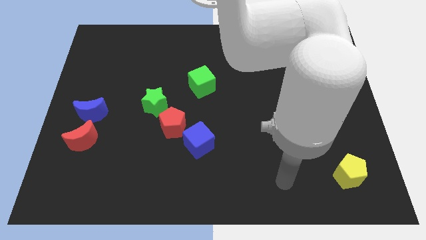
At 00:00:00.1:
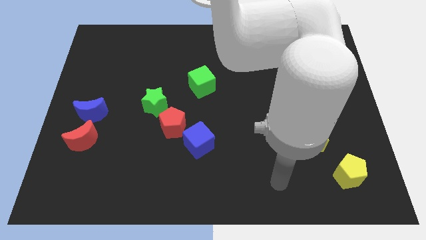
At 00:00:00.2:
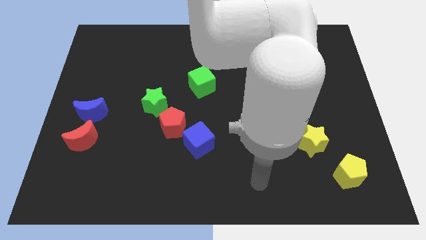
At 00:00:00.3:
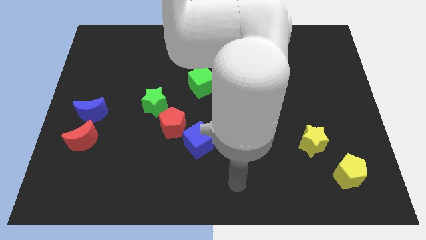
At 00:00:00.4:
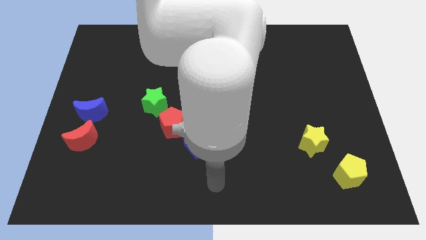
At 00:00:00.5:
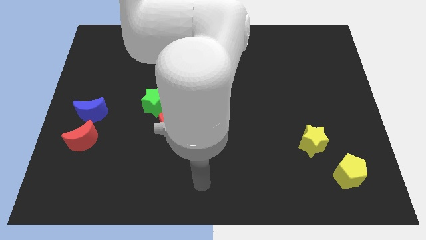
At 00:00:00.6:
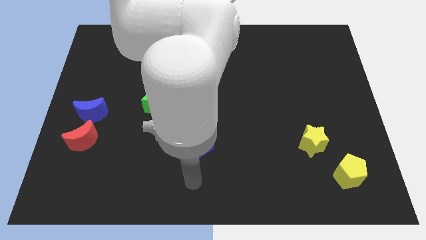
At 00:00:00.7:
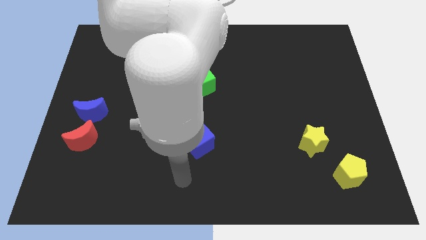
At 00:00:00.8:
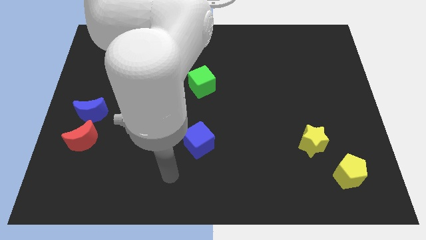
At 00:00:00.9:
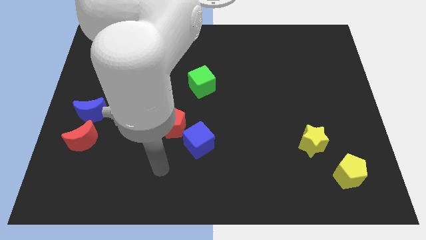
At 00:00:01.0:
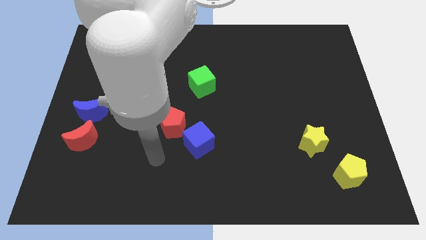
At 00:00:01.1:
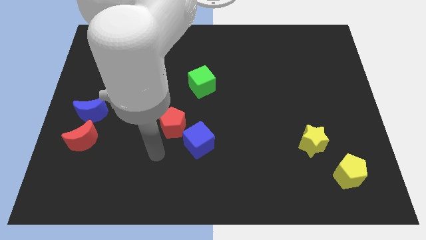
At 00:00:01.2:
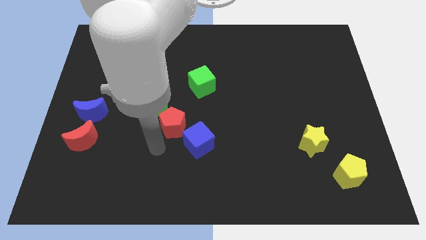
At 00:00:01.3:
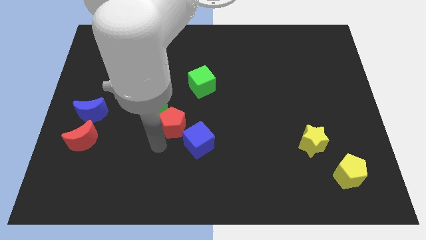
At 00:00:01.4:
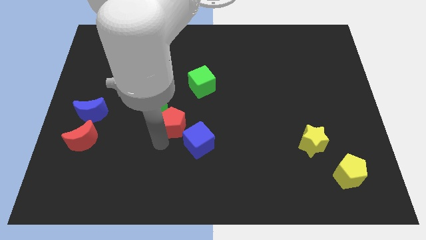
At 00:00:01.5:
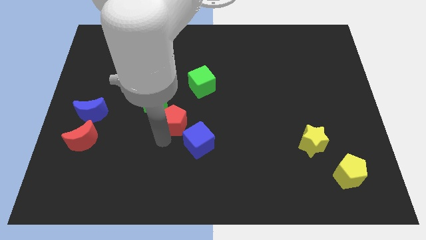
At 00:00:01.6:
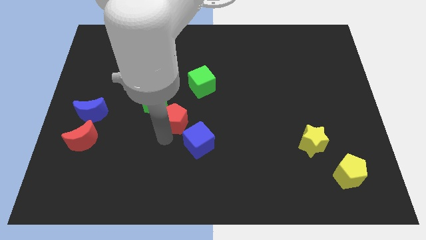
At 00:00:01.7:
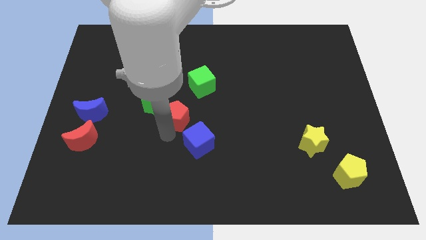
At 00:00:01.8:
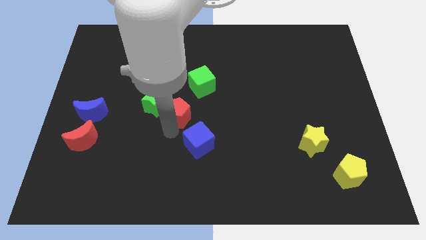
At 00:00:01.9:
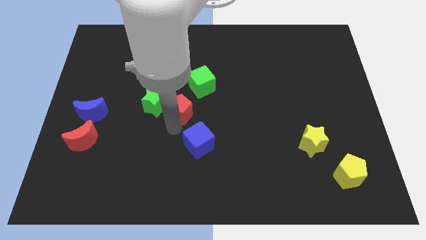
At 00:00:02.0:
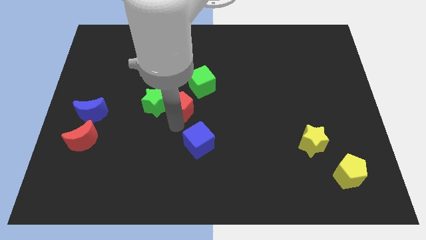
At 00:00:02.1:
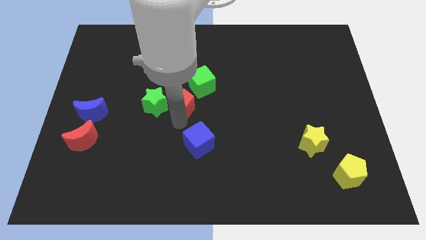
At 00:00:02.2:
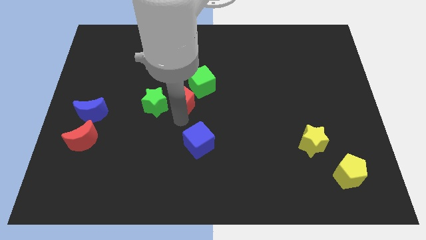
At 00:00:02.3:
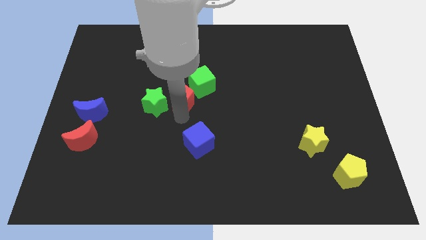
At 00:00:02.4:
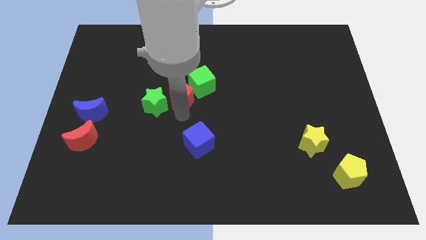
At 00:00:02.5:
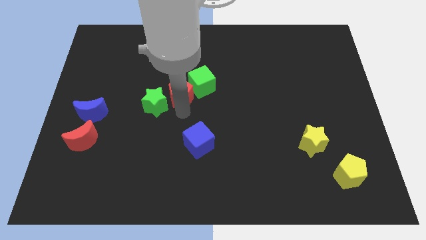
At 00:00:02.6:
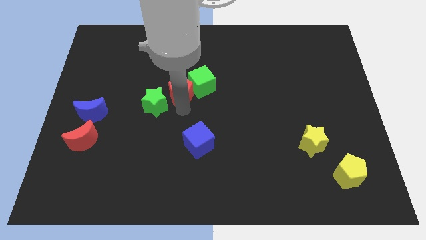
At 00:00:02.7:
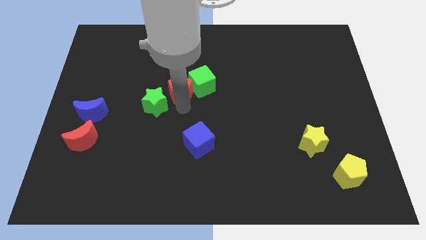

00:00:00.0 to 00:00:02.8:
slide the red pentagon next to the green cube

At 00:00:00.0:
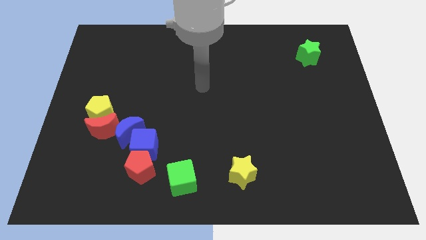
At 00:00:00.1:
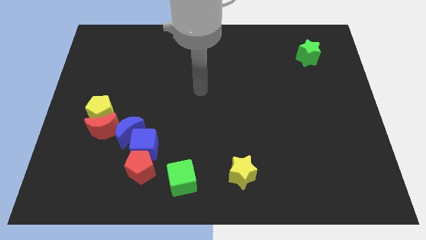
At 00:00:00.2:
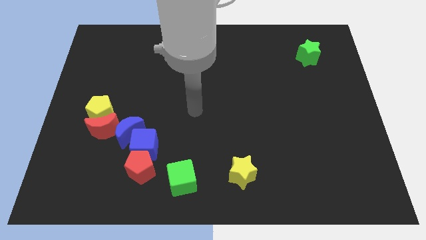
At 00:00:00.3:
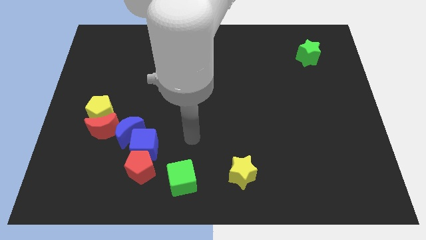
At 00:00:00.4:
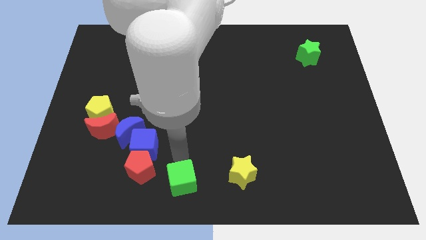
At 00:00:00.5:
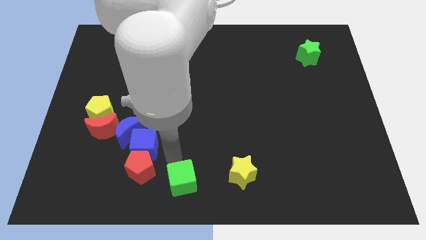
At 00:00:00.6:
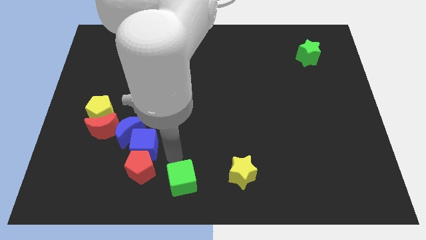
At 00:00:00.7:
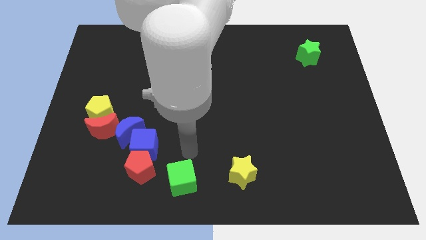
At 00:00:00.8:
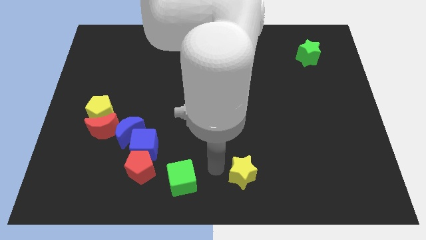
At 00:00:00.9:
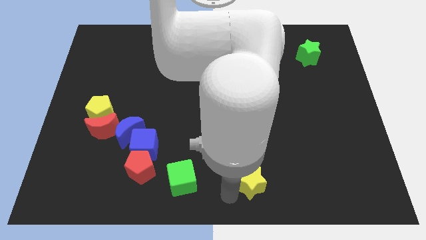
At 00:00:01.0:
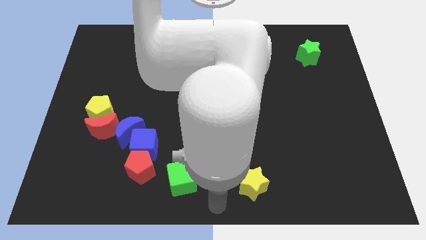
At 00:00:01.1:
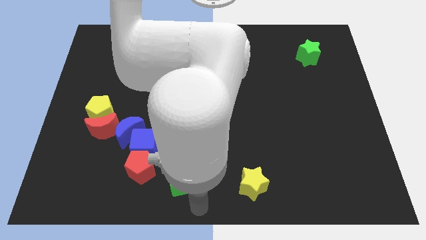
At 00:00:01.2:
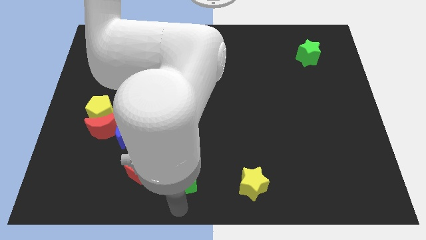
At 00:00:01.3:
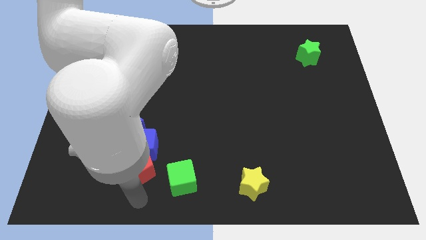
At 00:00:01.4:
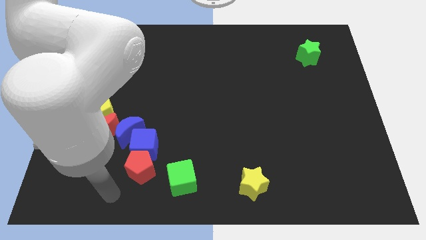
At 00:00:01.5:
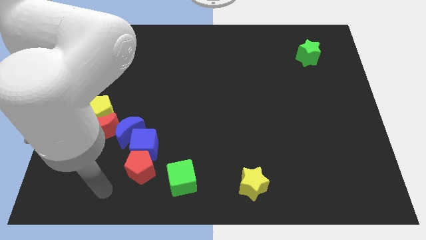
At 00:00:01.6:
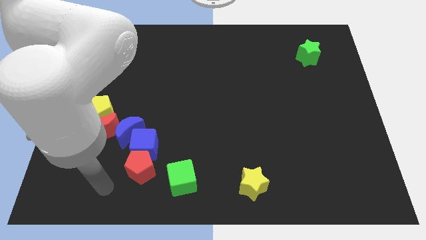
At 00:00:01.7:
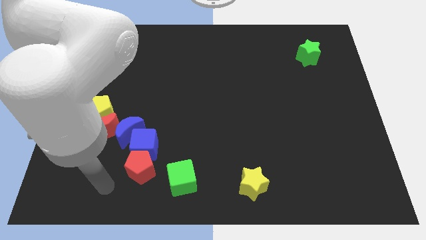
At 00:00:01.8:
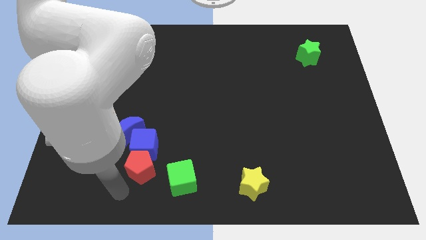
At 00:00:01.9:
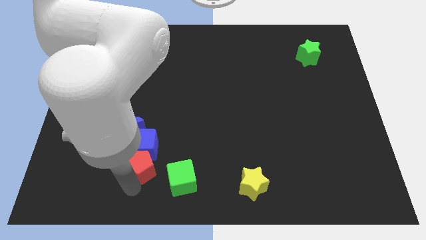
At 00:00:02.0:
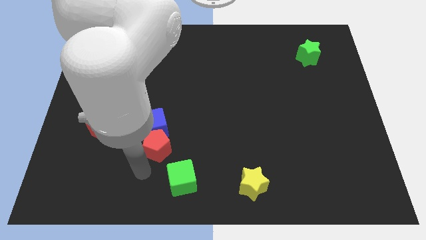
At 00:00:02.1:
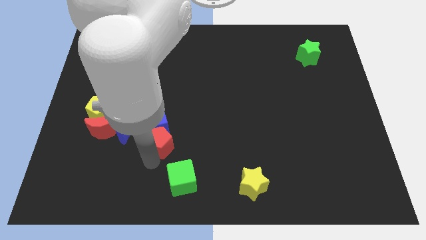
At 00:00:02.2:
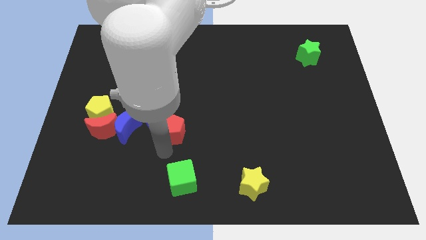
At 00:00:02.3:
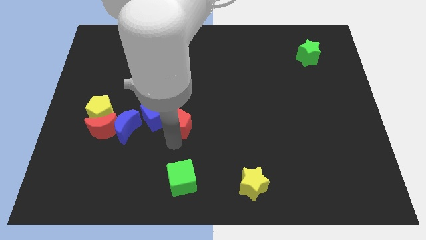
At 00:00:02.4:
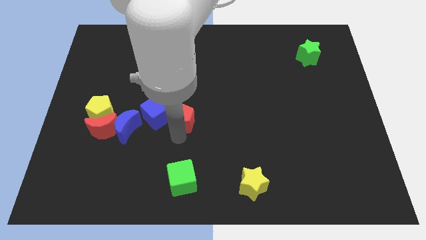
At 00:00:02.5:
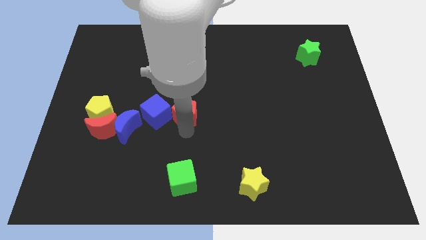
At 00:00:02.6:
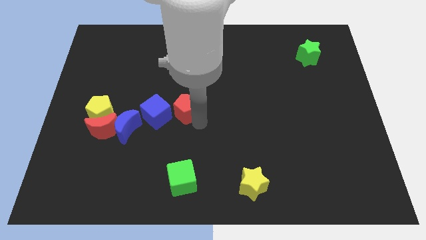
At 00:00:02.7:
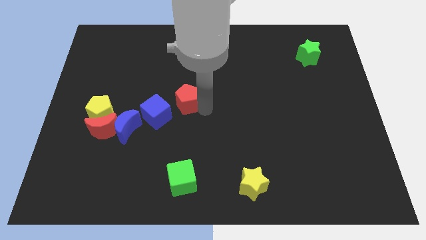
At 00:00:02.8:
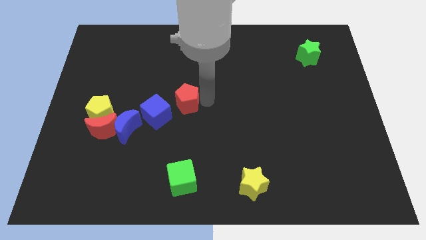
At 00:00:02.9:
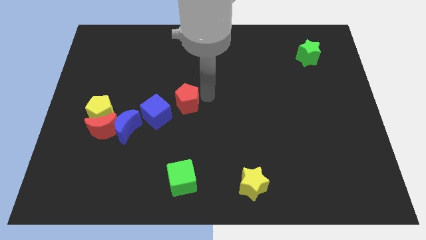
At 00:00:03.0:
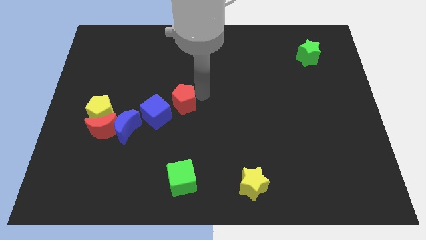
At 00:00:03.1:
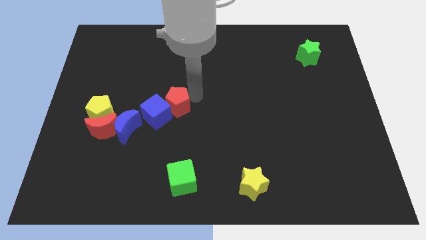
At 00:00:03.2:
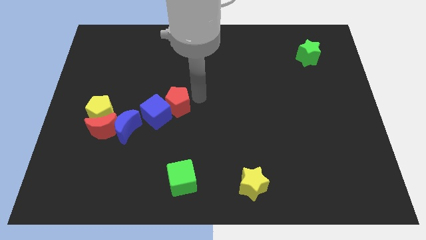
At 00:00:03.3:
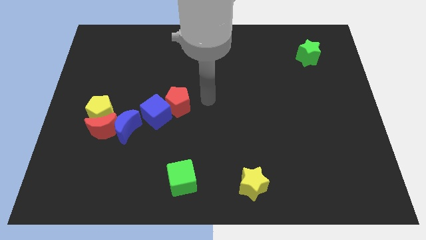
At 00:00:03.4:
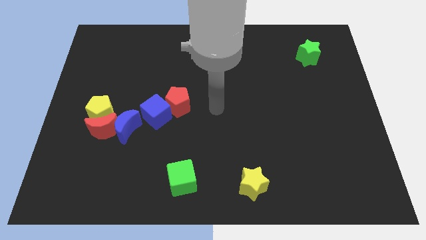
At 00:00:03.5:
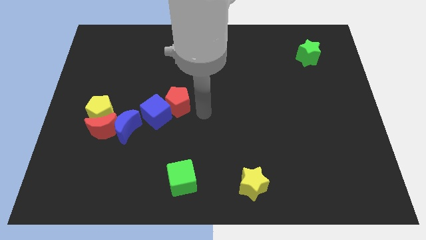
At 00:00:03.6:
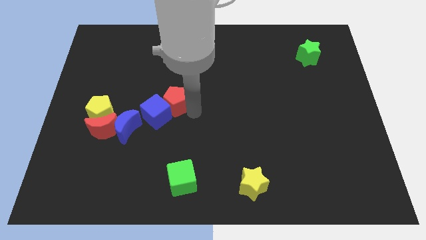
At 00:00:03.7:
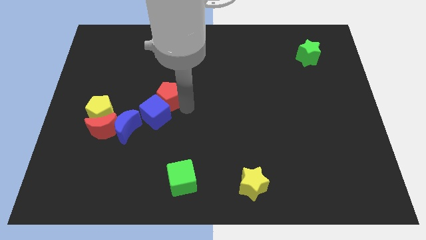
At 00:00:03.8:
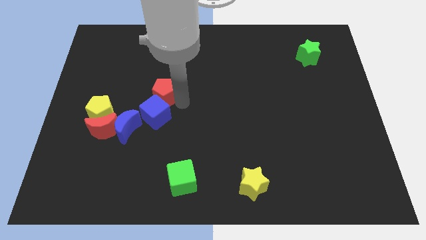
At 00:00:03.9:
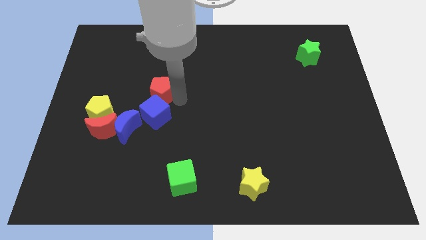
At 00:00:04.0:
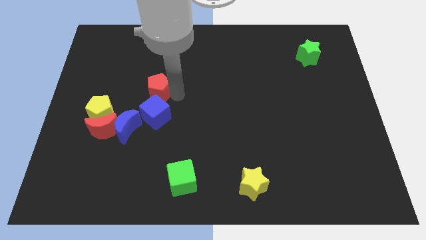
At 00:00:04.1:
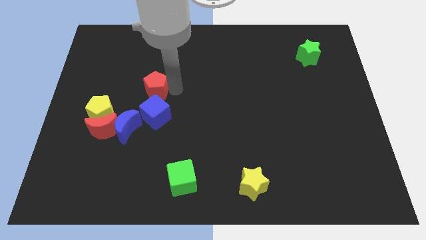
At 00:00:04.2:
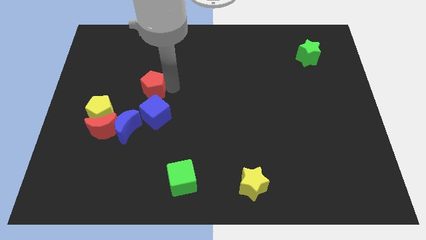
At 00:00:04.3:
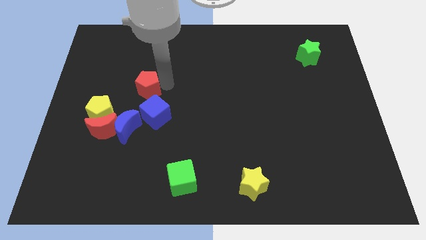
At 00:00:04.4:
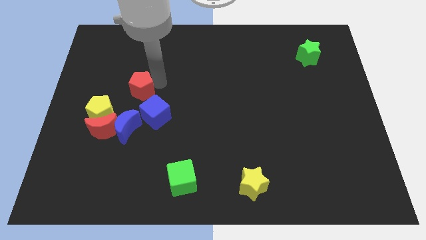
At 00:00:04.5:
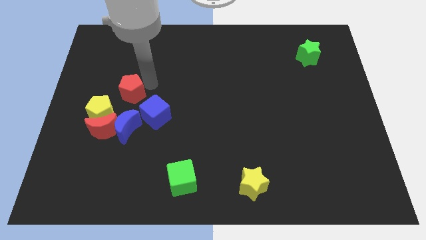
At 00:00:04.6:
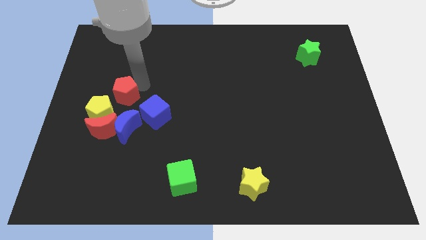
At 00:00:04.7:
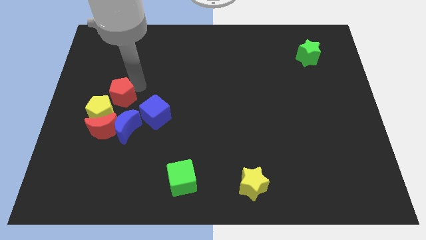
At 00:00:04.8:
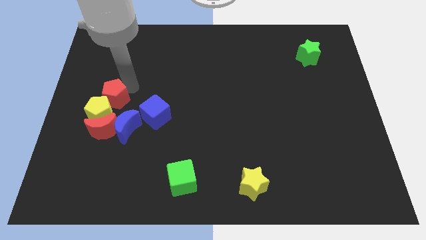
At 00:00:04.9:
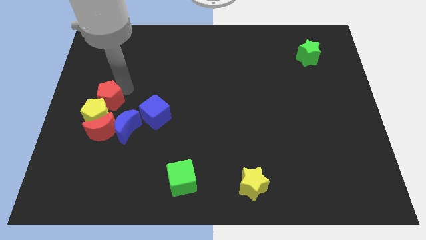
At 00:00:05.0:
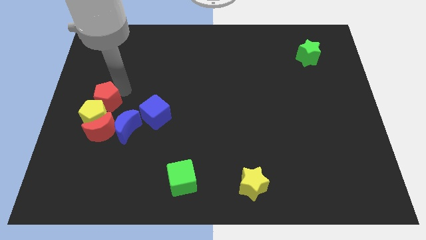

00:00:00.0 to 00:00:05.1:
push the red pentagon next to the yellow pentagon

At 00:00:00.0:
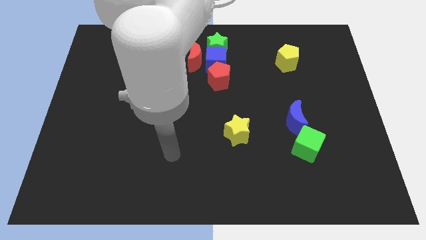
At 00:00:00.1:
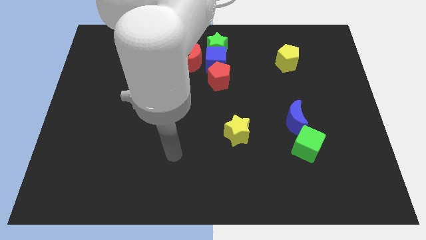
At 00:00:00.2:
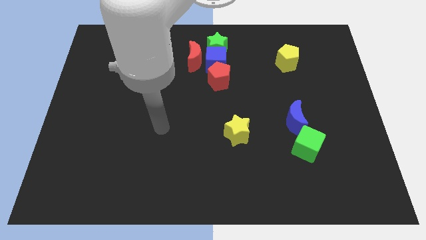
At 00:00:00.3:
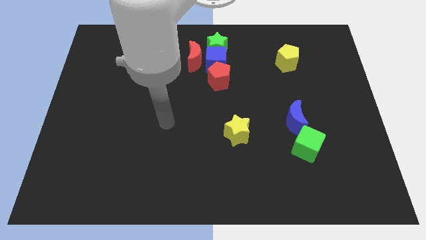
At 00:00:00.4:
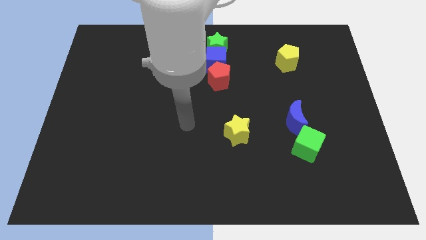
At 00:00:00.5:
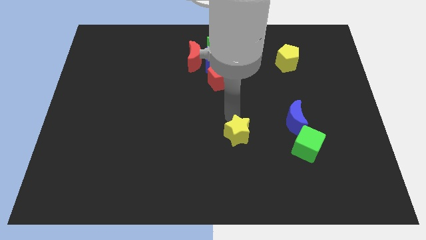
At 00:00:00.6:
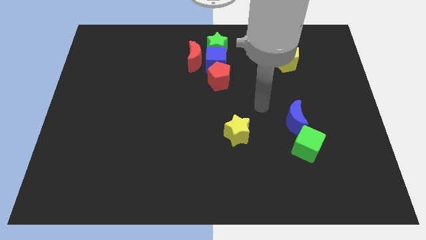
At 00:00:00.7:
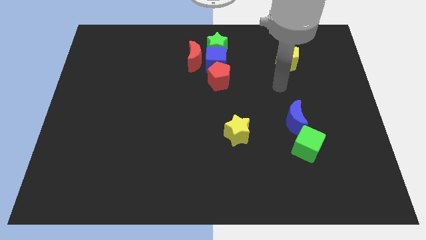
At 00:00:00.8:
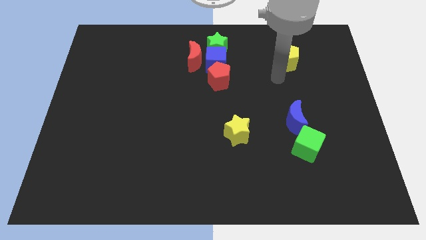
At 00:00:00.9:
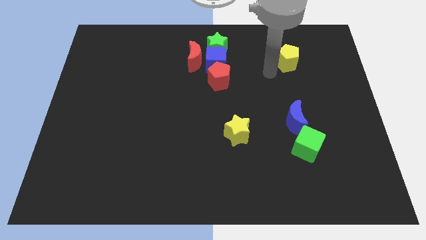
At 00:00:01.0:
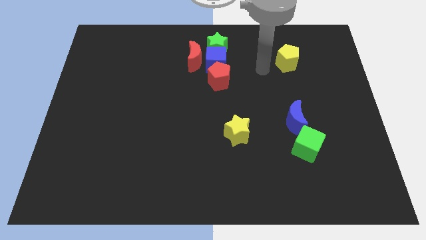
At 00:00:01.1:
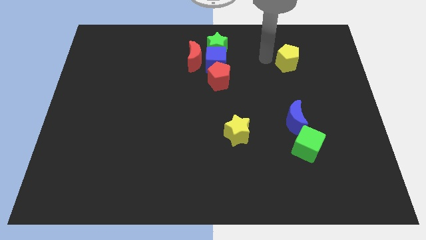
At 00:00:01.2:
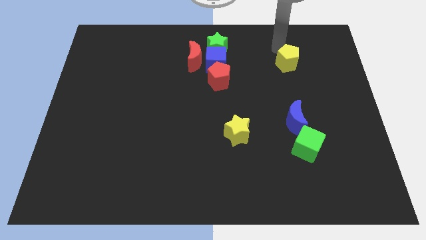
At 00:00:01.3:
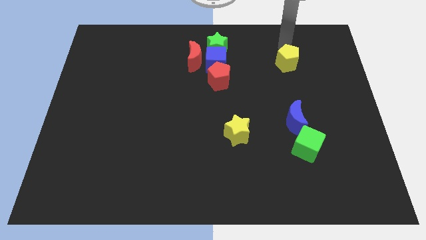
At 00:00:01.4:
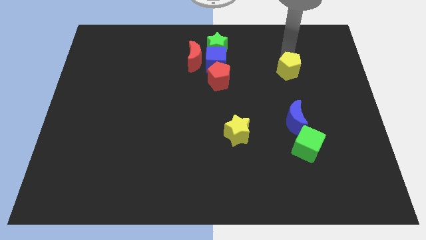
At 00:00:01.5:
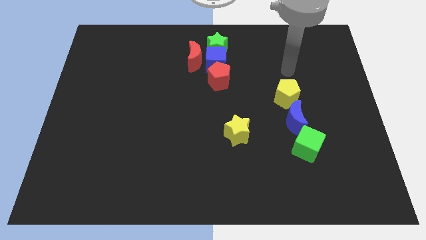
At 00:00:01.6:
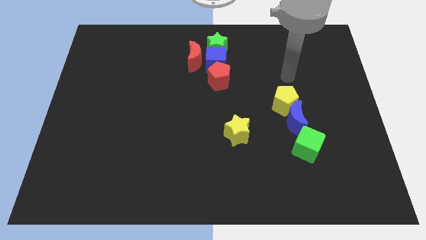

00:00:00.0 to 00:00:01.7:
push the yellow pentagon next to the blue moon
